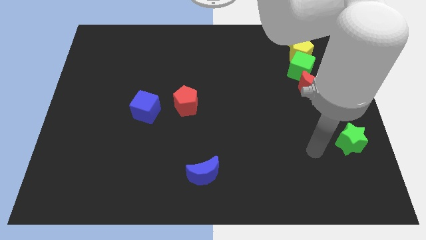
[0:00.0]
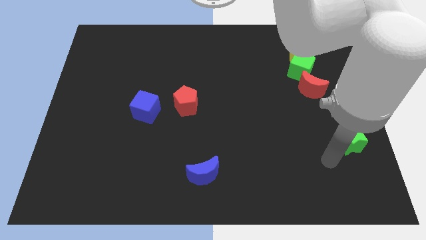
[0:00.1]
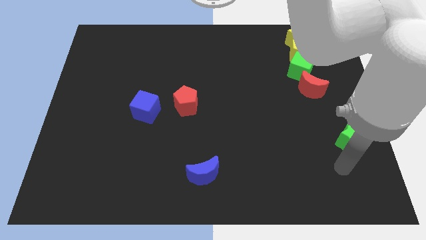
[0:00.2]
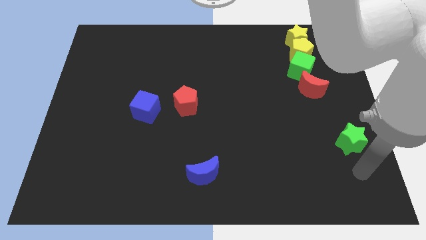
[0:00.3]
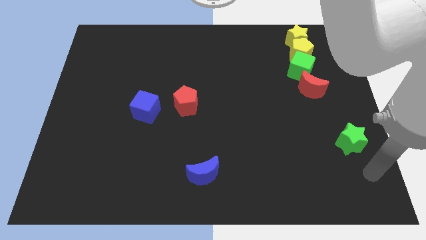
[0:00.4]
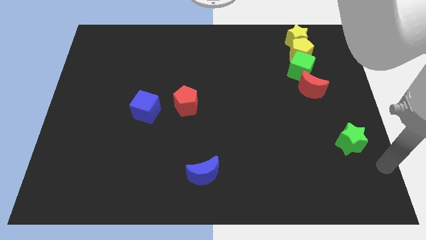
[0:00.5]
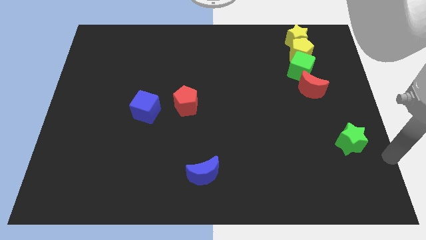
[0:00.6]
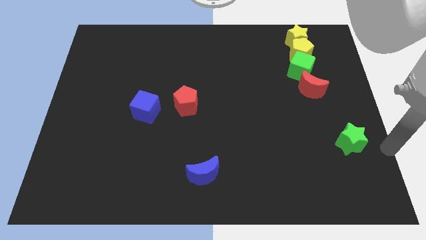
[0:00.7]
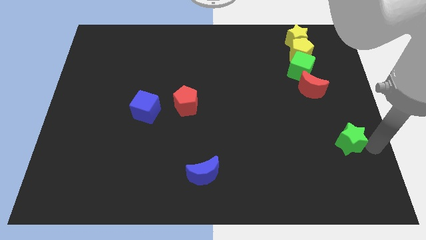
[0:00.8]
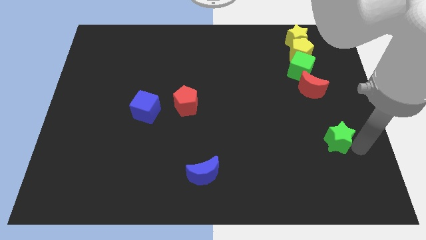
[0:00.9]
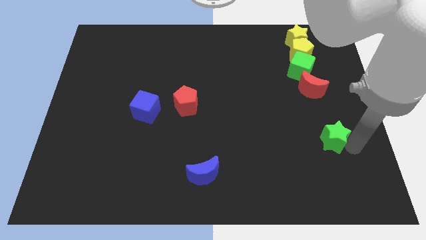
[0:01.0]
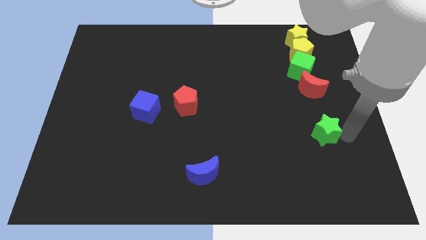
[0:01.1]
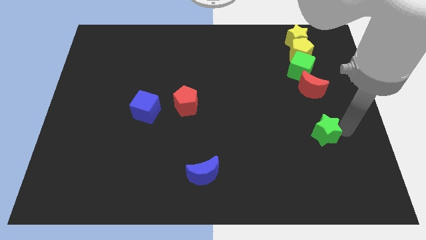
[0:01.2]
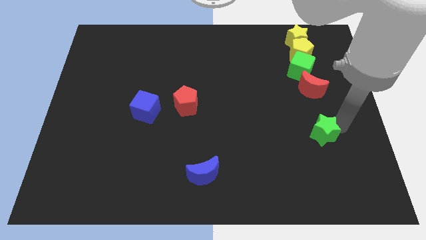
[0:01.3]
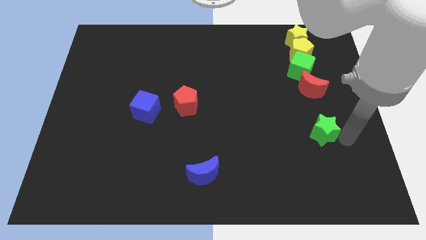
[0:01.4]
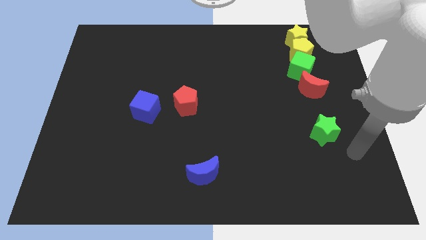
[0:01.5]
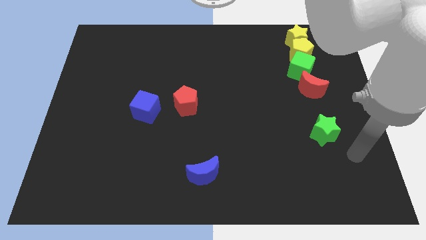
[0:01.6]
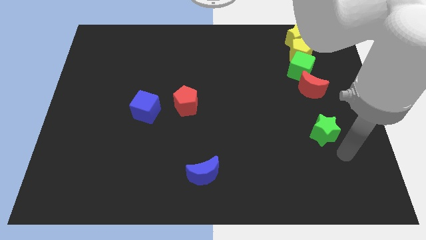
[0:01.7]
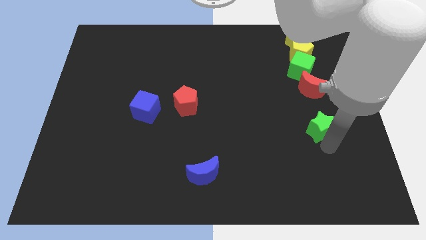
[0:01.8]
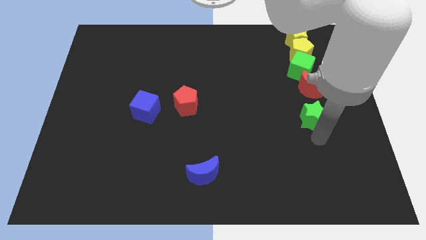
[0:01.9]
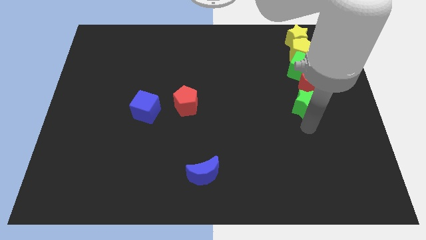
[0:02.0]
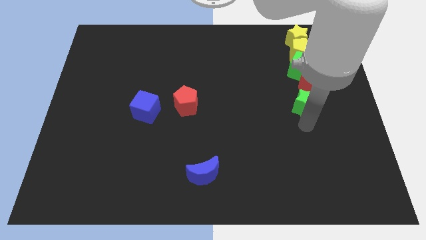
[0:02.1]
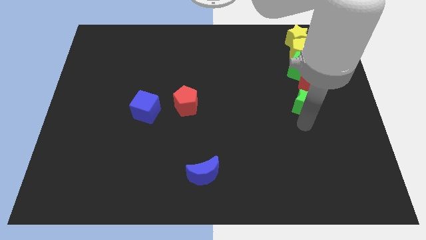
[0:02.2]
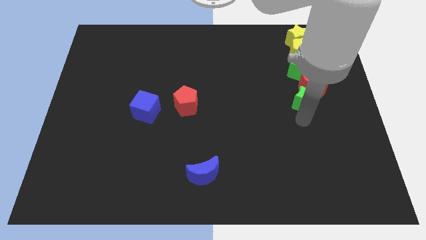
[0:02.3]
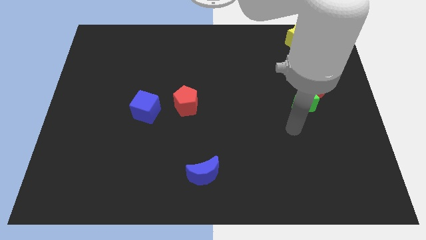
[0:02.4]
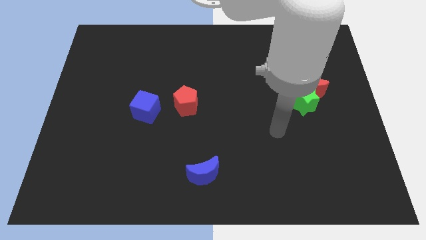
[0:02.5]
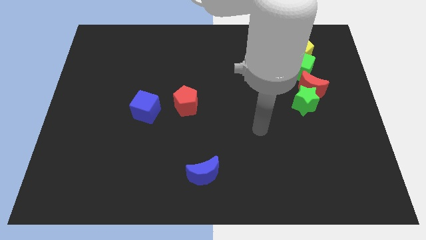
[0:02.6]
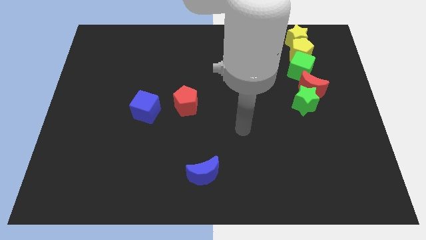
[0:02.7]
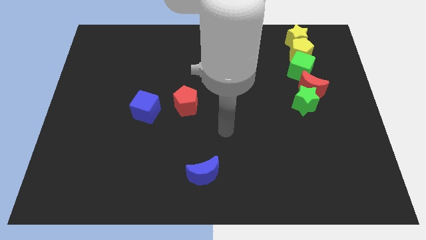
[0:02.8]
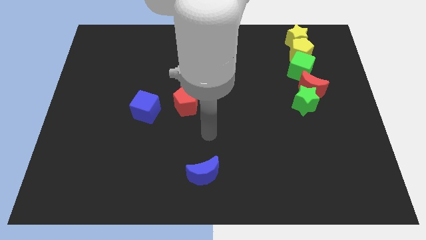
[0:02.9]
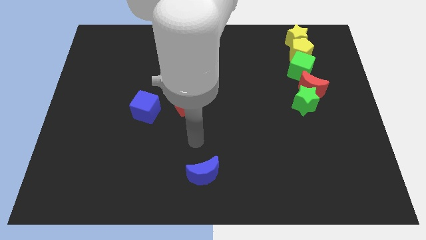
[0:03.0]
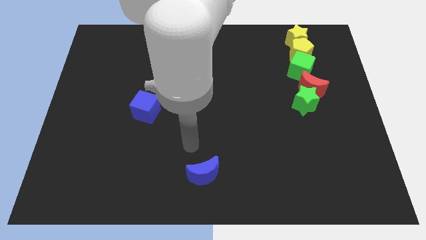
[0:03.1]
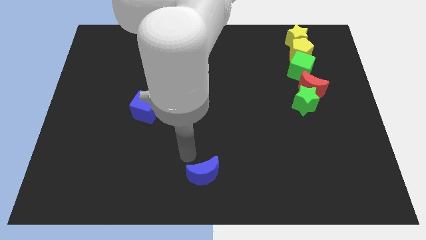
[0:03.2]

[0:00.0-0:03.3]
drag the green star into the red crescent

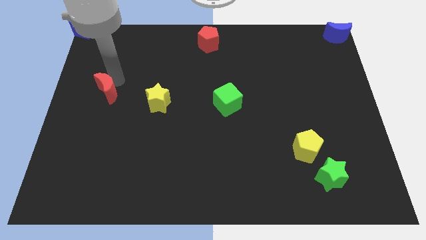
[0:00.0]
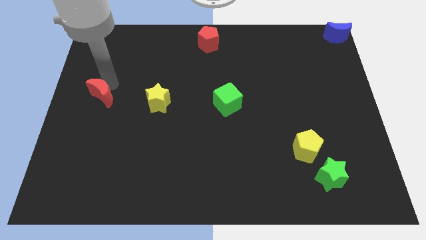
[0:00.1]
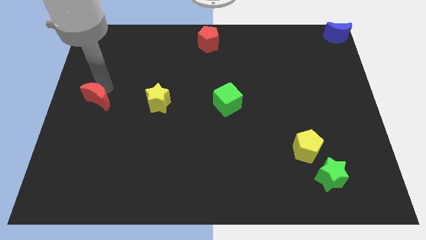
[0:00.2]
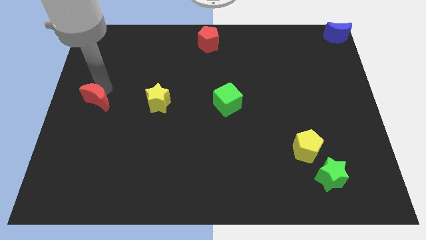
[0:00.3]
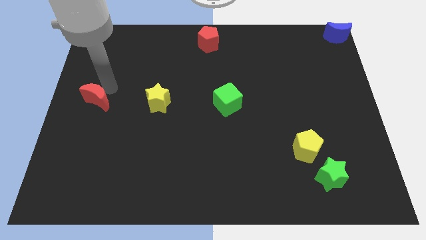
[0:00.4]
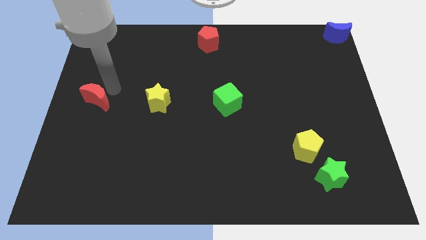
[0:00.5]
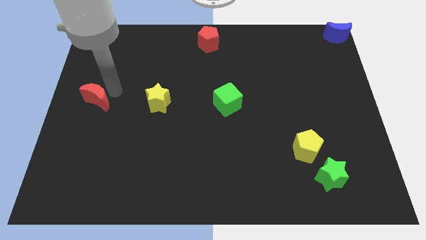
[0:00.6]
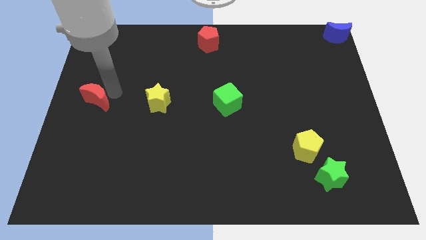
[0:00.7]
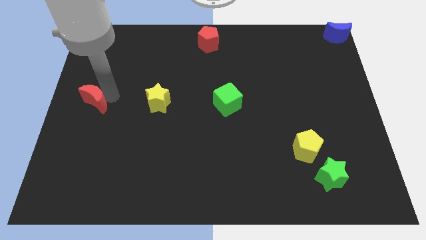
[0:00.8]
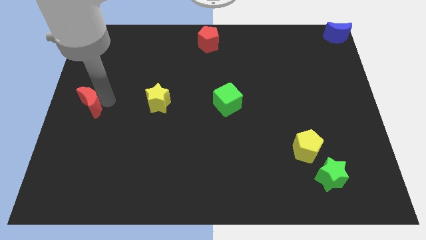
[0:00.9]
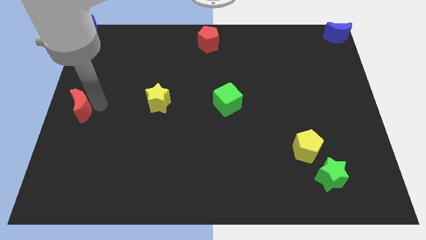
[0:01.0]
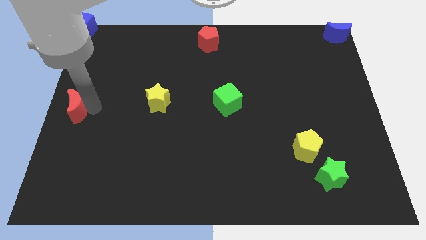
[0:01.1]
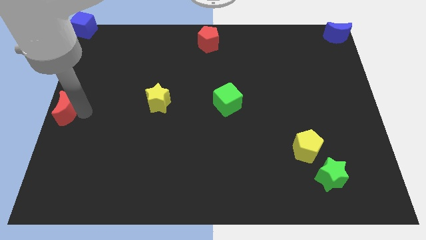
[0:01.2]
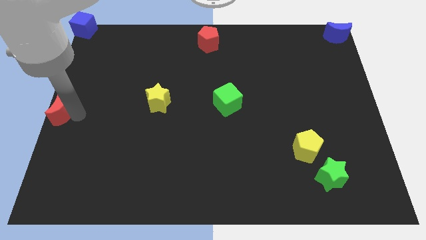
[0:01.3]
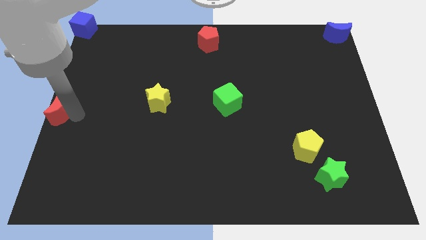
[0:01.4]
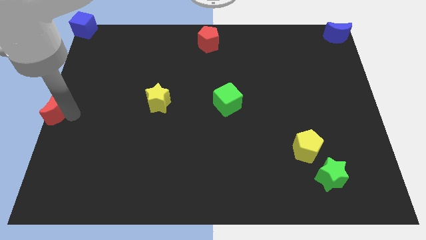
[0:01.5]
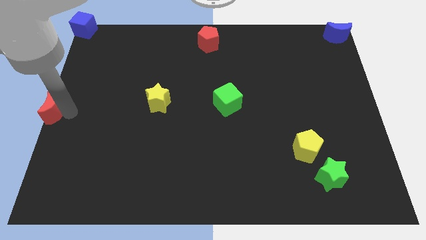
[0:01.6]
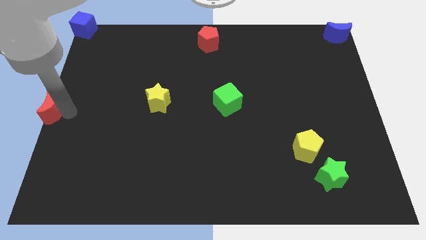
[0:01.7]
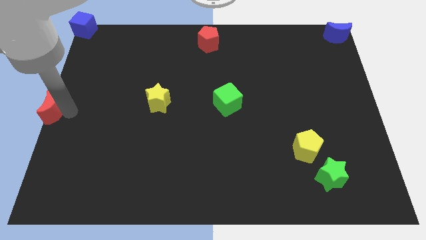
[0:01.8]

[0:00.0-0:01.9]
move the red crescent to the center left of the board

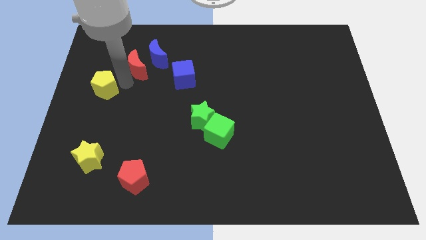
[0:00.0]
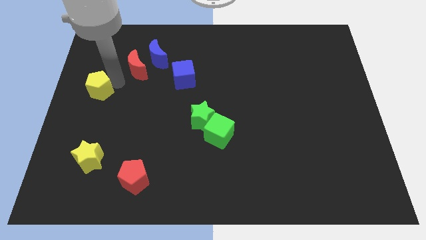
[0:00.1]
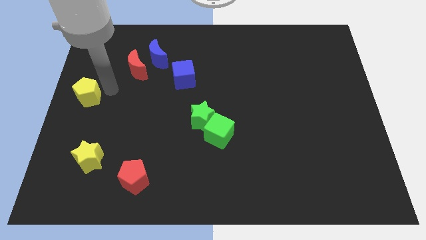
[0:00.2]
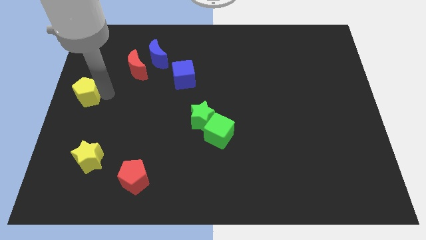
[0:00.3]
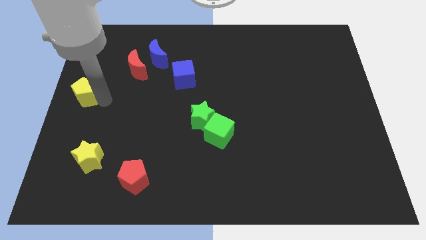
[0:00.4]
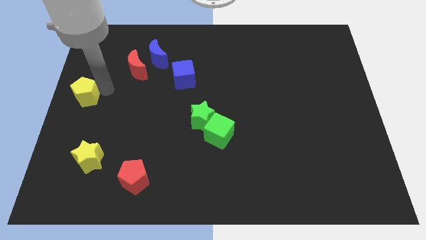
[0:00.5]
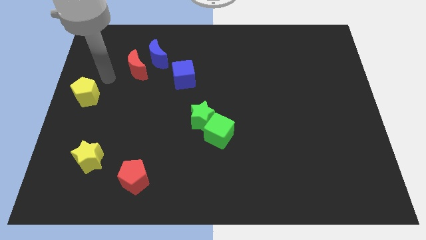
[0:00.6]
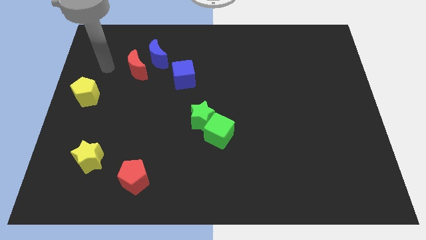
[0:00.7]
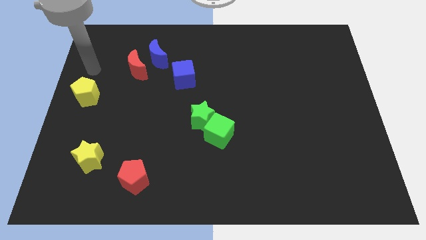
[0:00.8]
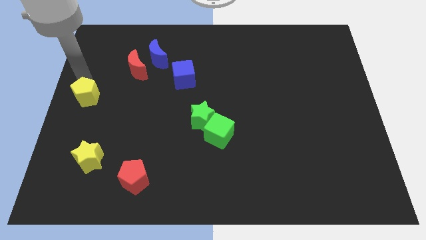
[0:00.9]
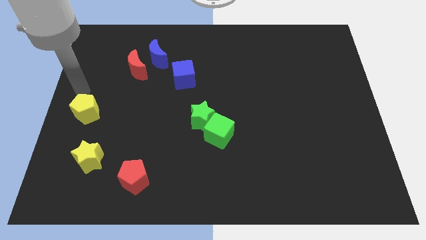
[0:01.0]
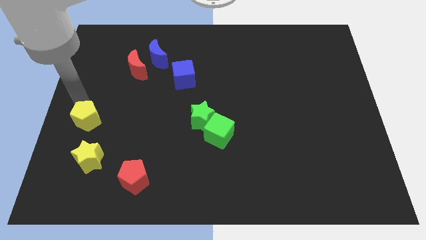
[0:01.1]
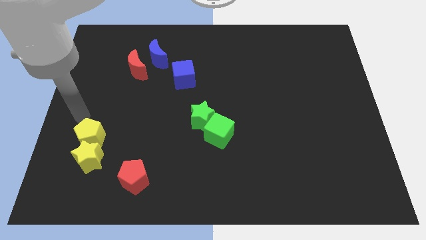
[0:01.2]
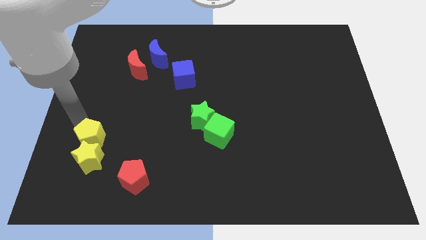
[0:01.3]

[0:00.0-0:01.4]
push the yellow pentagon into the yellow star

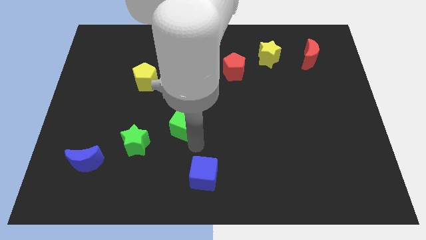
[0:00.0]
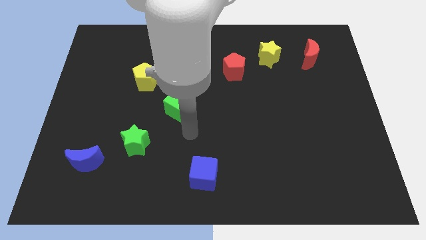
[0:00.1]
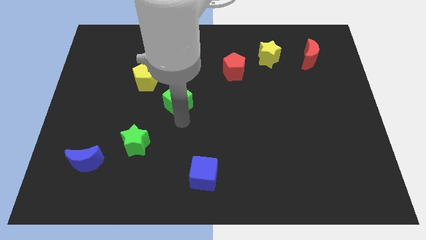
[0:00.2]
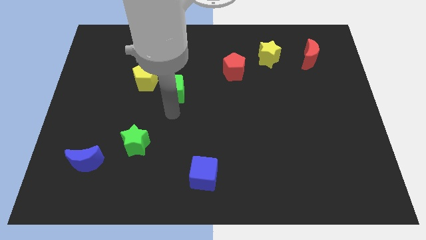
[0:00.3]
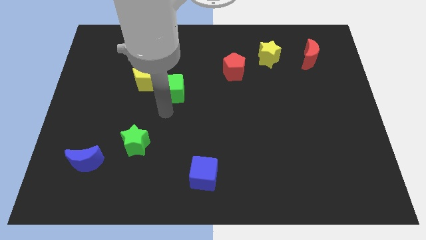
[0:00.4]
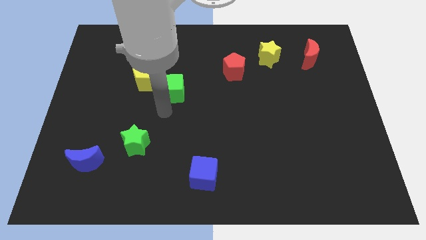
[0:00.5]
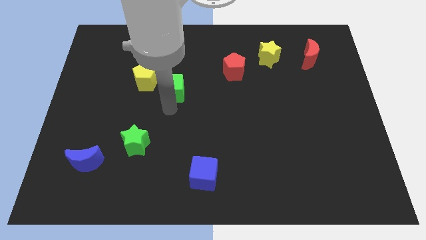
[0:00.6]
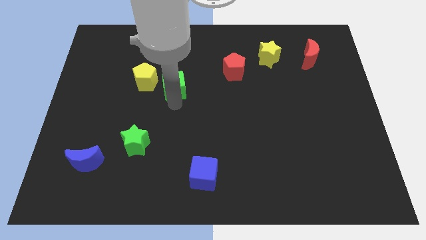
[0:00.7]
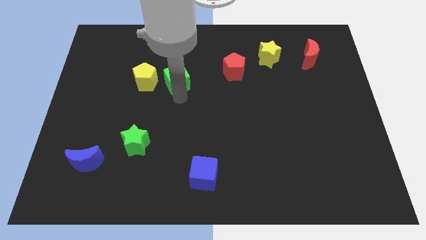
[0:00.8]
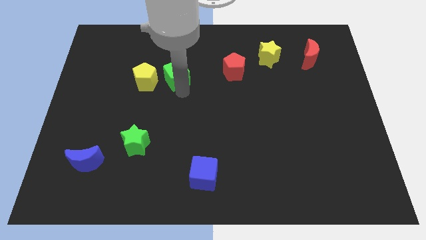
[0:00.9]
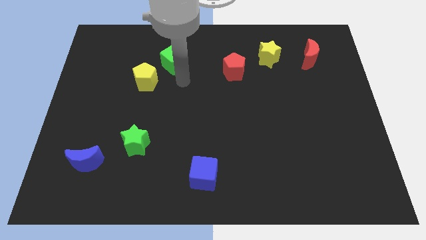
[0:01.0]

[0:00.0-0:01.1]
place green cube to top right of yellow pentagon

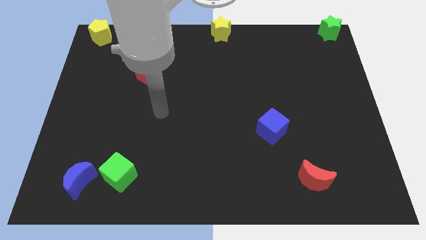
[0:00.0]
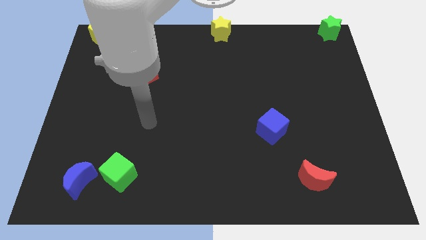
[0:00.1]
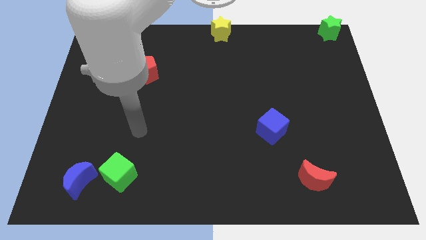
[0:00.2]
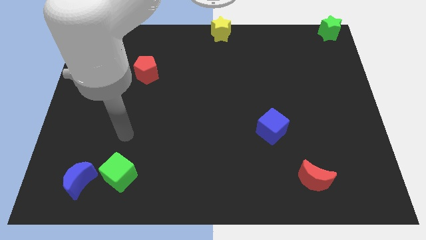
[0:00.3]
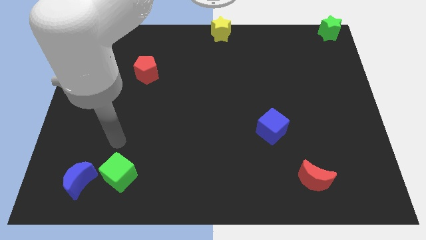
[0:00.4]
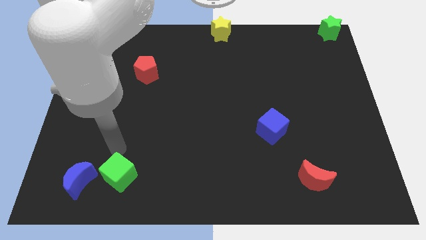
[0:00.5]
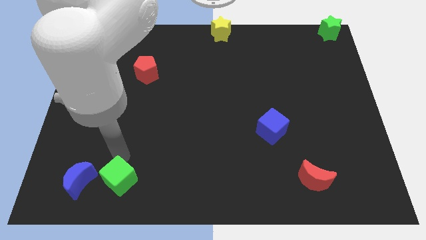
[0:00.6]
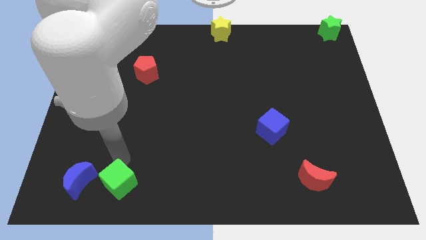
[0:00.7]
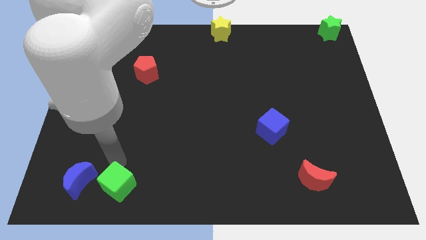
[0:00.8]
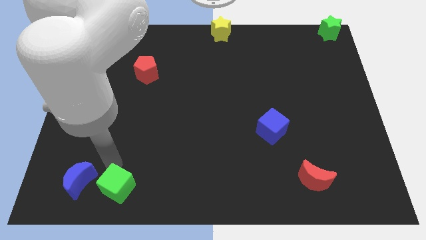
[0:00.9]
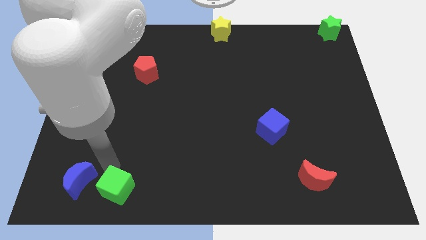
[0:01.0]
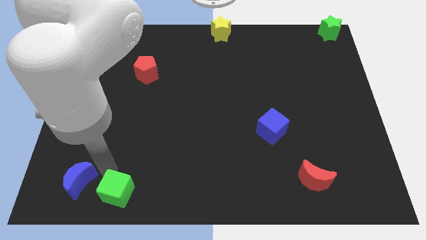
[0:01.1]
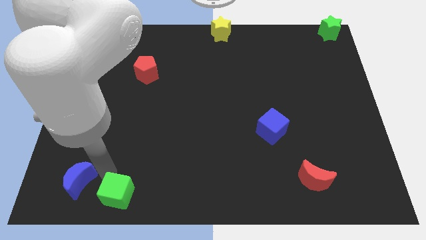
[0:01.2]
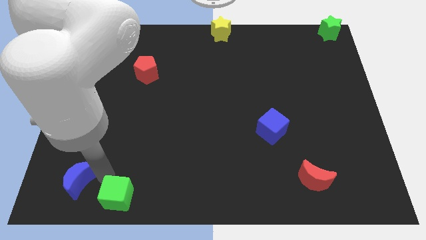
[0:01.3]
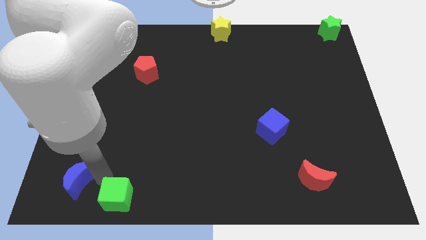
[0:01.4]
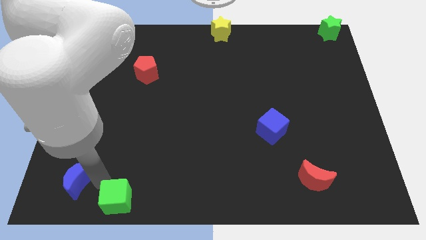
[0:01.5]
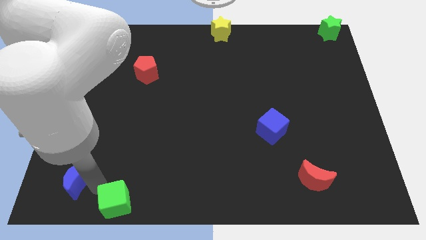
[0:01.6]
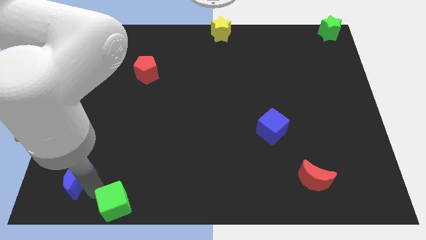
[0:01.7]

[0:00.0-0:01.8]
move the green cube slightly down
